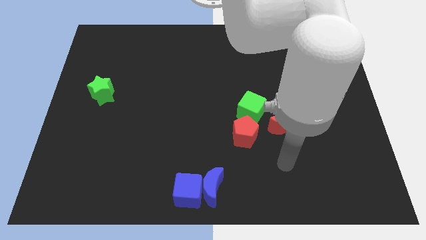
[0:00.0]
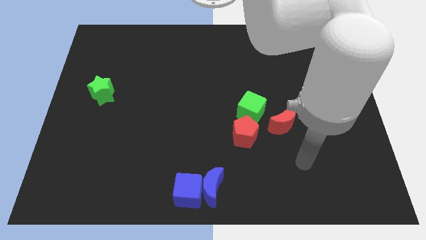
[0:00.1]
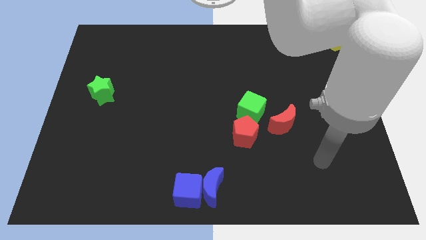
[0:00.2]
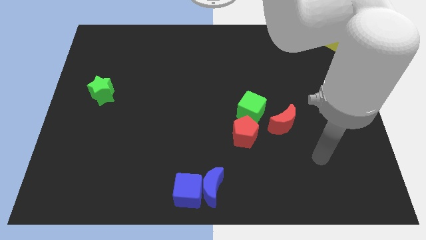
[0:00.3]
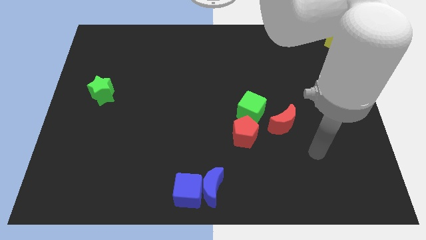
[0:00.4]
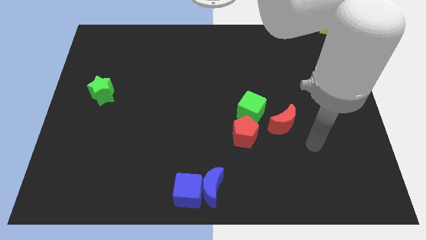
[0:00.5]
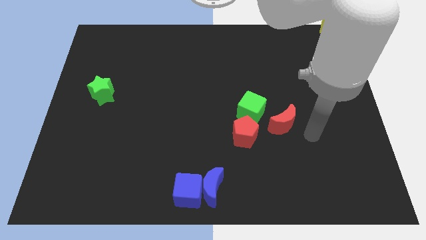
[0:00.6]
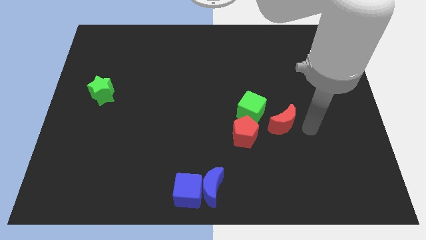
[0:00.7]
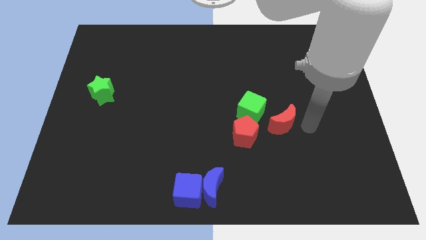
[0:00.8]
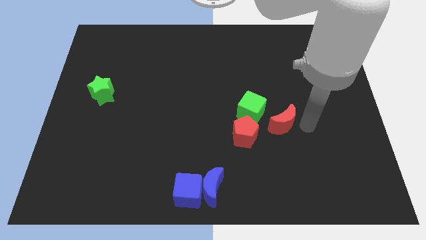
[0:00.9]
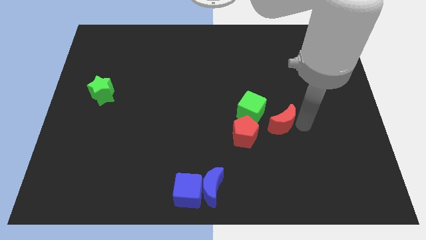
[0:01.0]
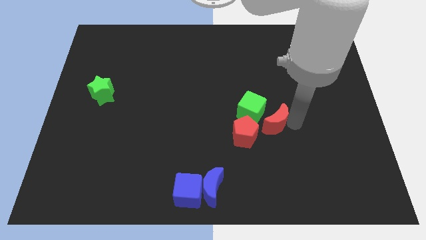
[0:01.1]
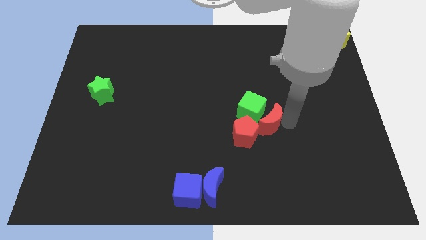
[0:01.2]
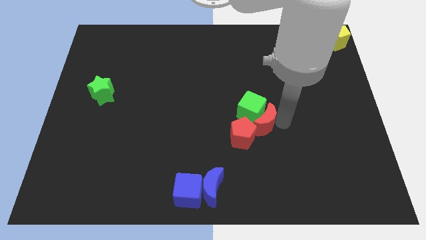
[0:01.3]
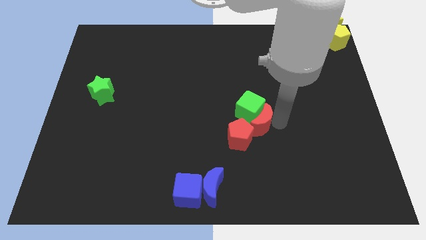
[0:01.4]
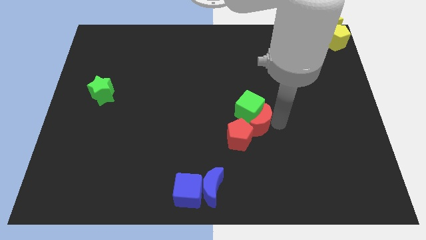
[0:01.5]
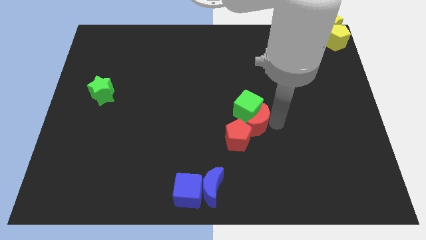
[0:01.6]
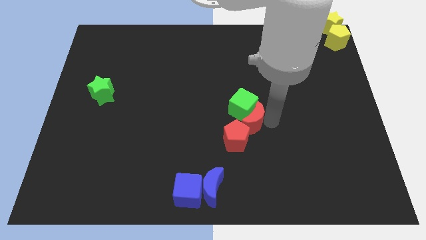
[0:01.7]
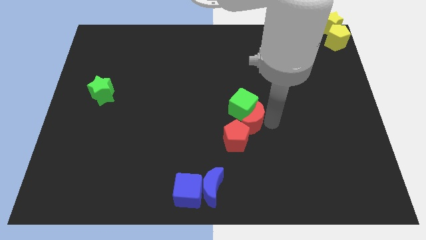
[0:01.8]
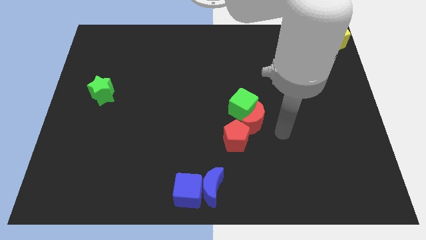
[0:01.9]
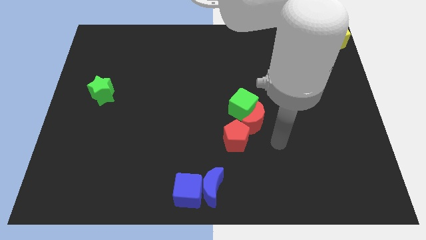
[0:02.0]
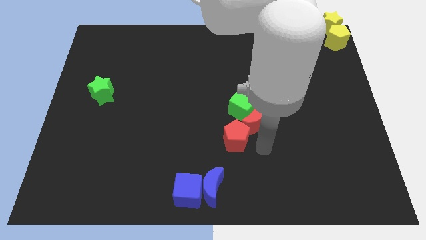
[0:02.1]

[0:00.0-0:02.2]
move the red crescent into the green cube

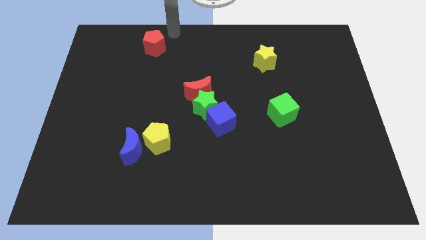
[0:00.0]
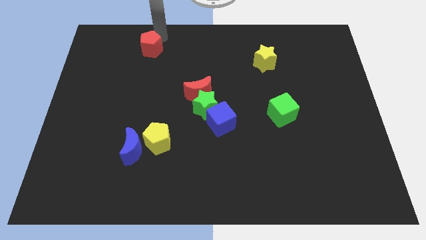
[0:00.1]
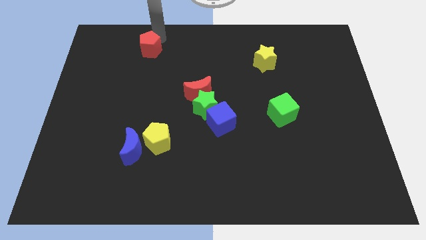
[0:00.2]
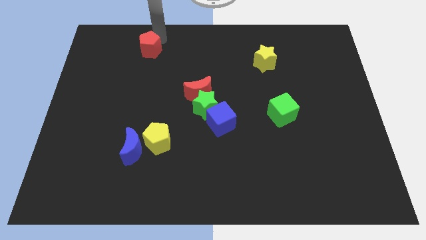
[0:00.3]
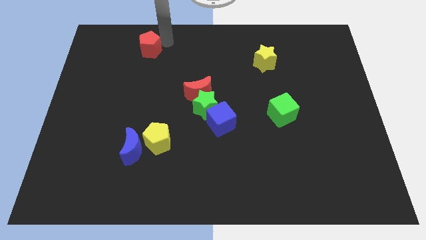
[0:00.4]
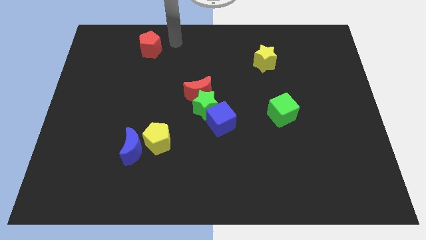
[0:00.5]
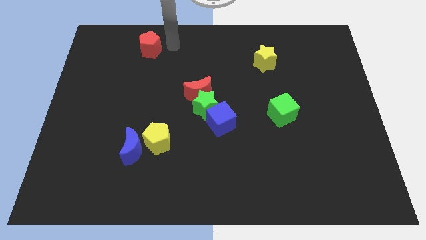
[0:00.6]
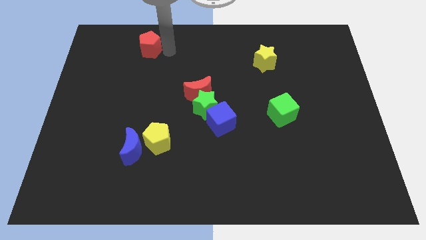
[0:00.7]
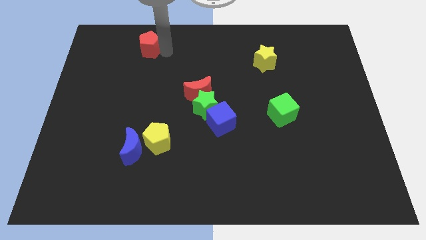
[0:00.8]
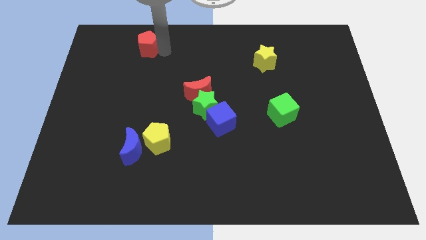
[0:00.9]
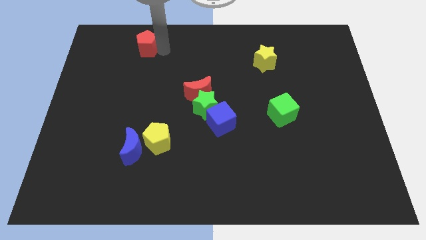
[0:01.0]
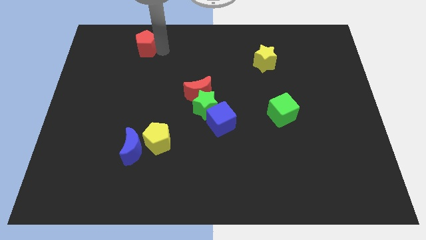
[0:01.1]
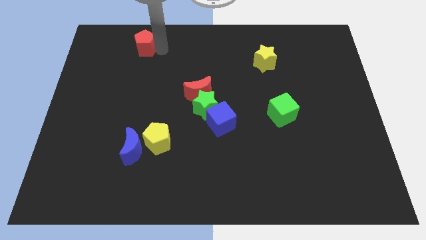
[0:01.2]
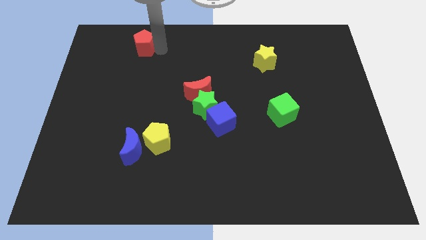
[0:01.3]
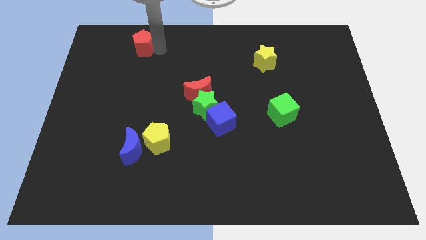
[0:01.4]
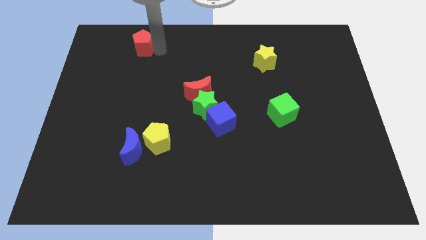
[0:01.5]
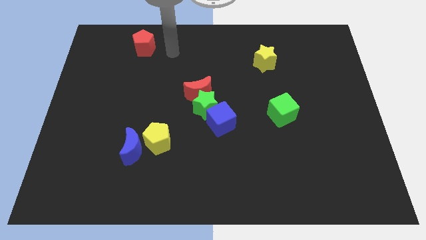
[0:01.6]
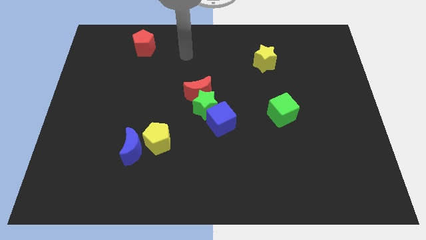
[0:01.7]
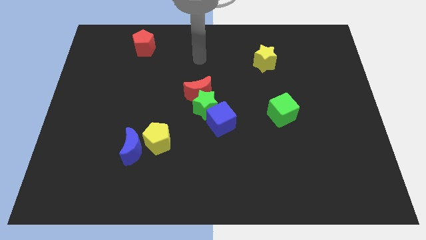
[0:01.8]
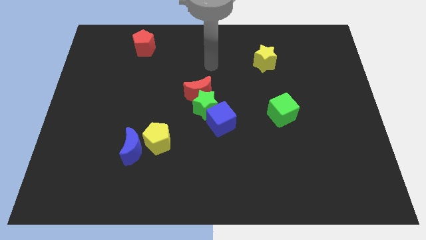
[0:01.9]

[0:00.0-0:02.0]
slide the red pentagon to the left

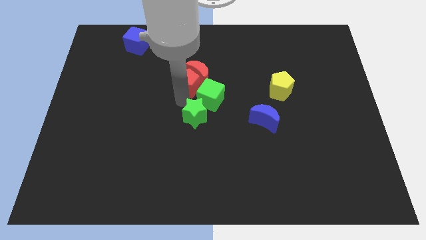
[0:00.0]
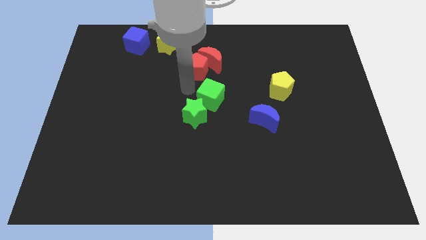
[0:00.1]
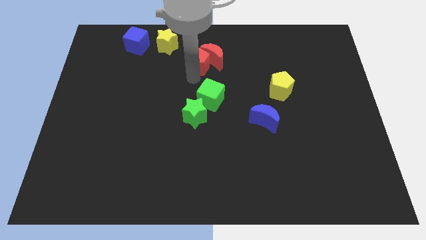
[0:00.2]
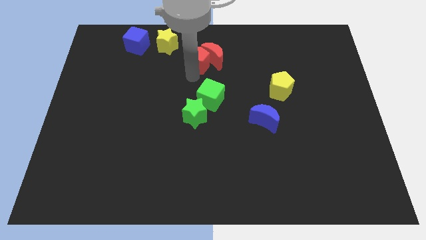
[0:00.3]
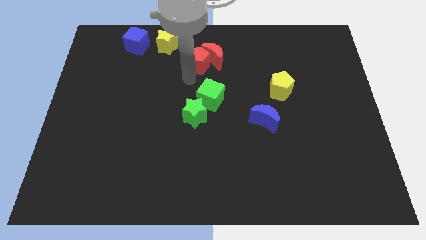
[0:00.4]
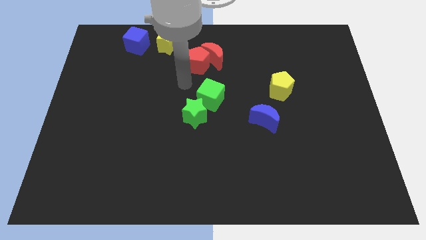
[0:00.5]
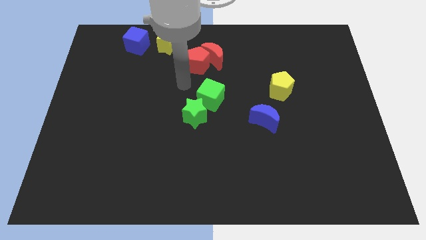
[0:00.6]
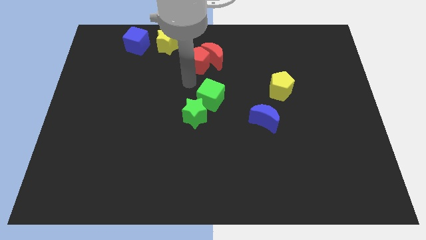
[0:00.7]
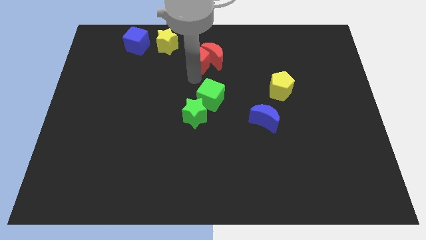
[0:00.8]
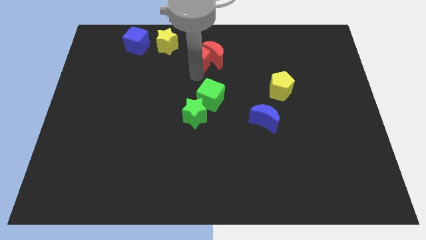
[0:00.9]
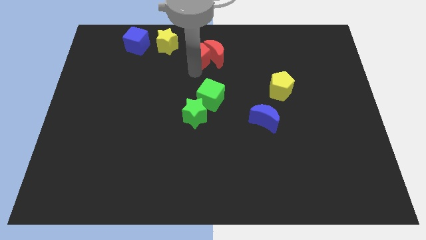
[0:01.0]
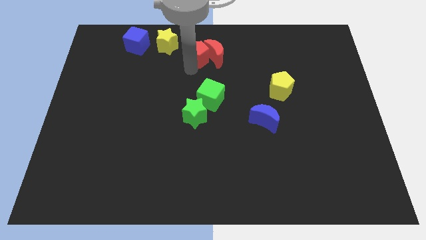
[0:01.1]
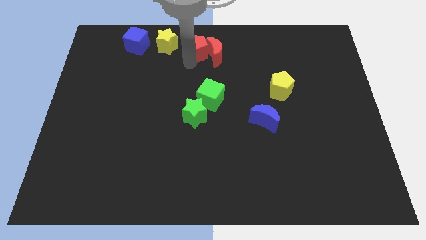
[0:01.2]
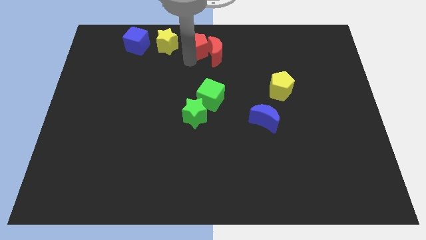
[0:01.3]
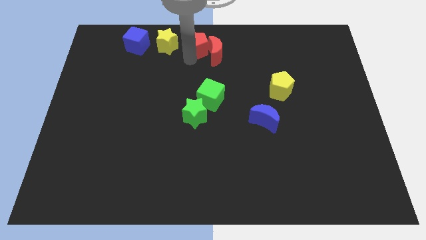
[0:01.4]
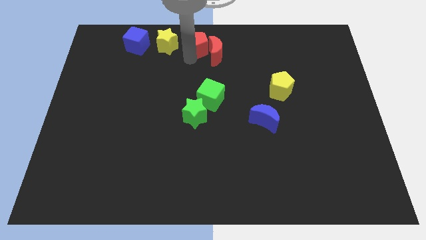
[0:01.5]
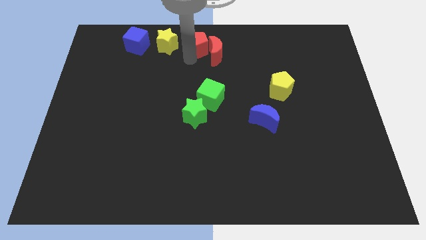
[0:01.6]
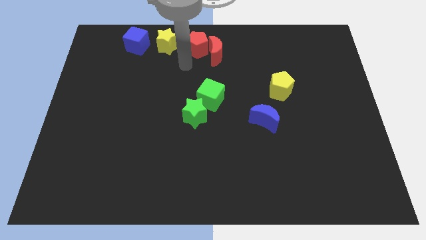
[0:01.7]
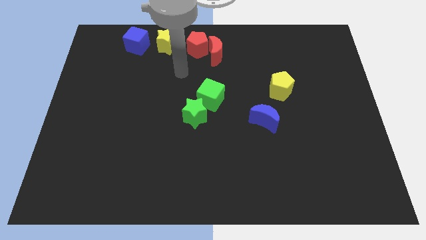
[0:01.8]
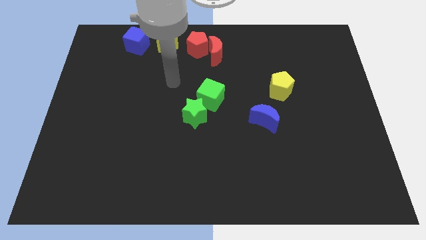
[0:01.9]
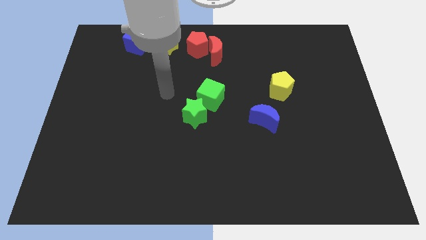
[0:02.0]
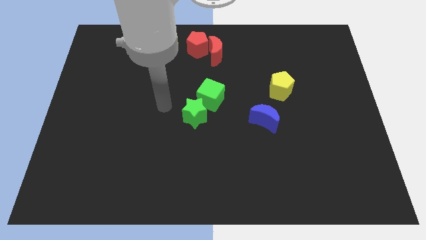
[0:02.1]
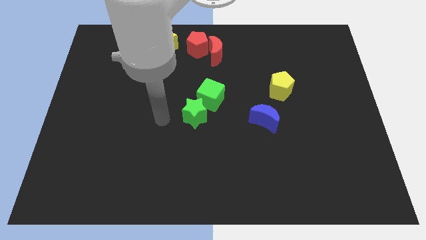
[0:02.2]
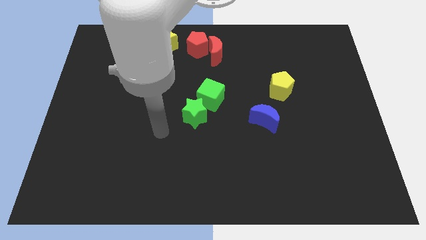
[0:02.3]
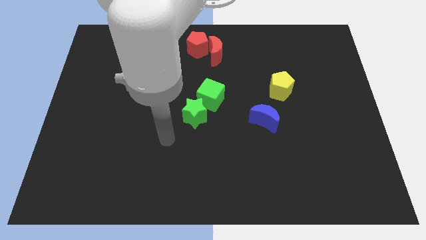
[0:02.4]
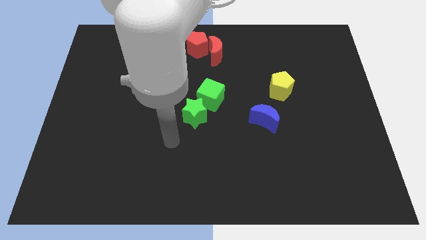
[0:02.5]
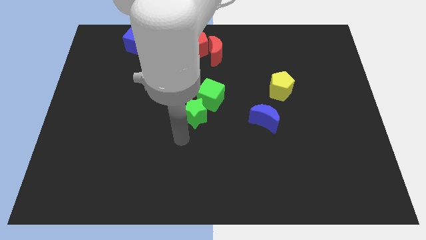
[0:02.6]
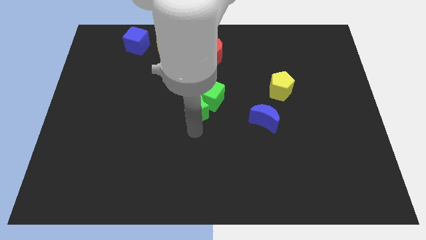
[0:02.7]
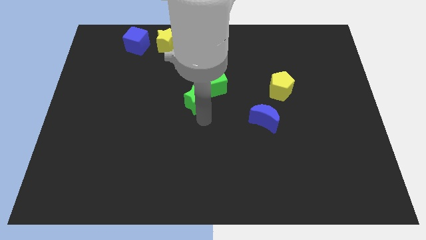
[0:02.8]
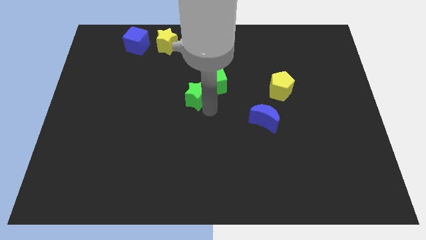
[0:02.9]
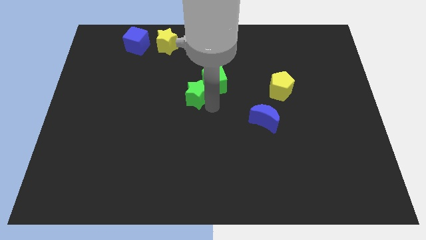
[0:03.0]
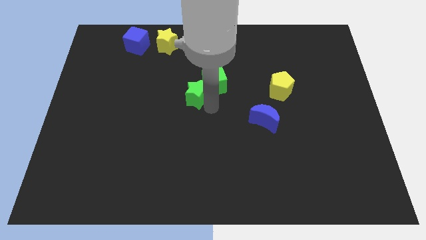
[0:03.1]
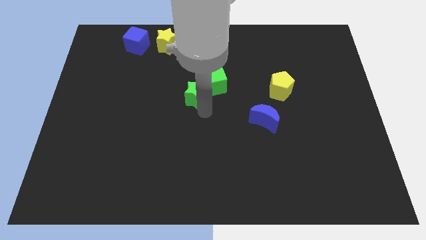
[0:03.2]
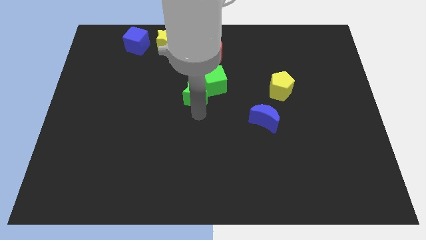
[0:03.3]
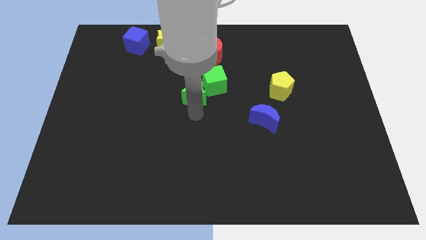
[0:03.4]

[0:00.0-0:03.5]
slide the red pentagon along with the red moon towards the top centre of the board

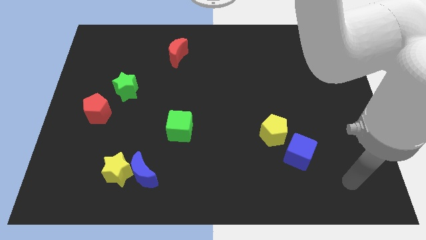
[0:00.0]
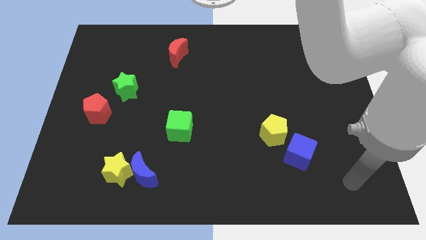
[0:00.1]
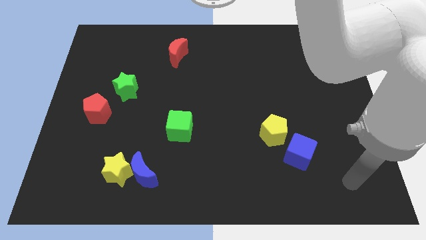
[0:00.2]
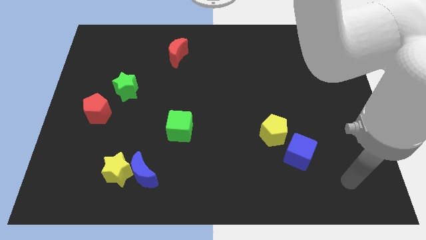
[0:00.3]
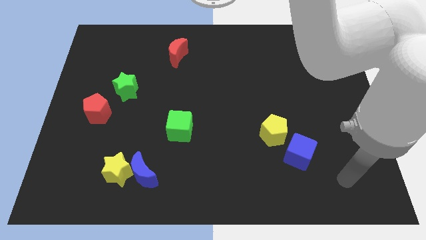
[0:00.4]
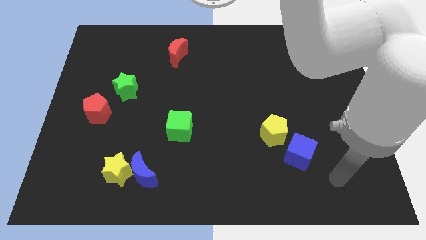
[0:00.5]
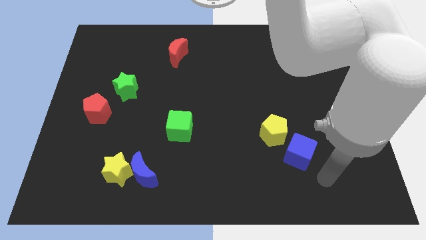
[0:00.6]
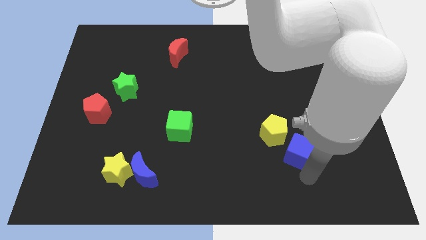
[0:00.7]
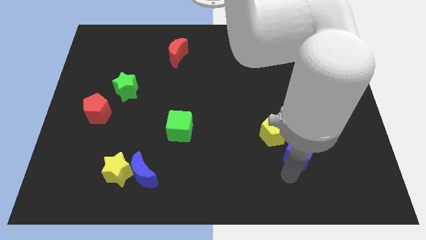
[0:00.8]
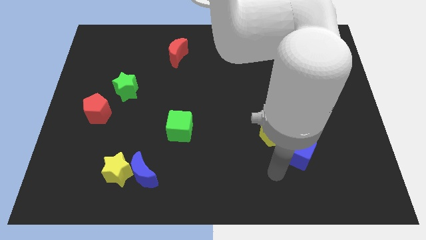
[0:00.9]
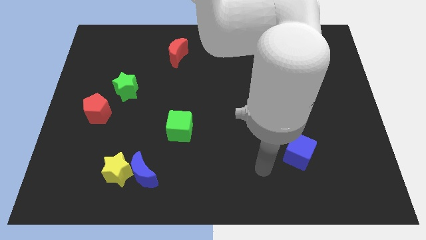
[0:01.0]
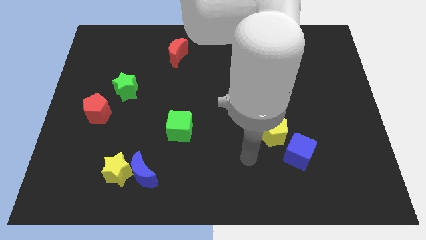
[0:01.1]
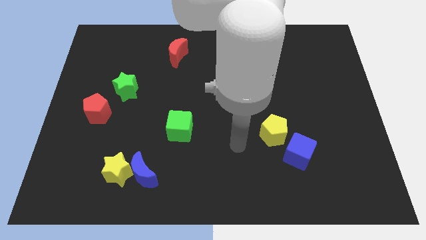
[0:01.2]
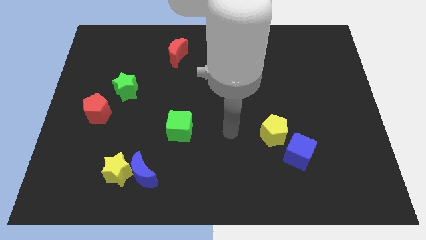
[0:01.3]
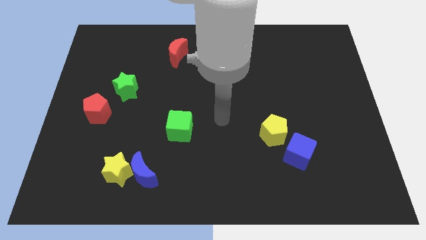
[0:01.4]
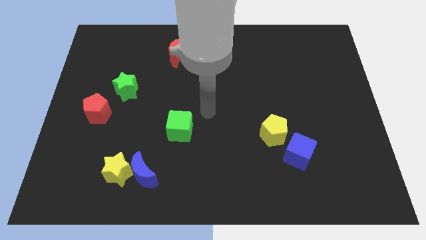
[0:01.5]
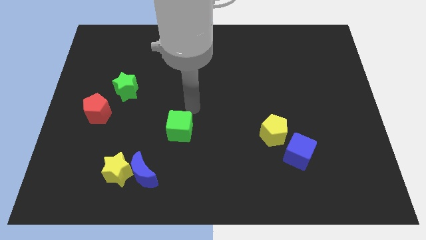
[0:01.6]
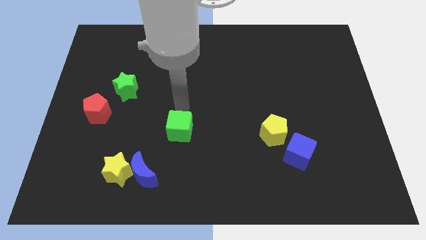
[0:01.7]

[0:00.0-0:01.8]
place the arm above the green cube
